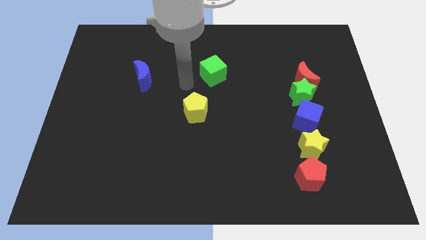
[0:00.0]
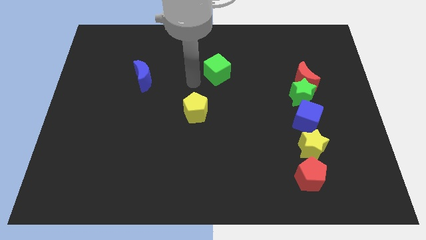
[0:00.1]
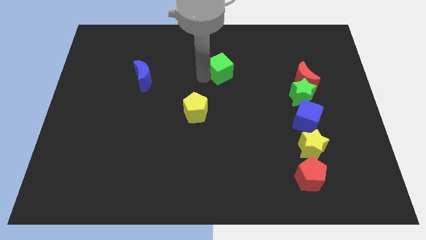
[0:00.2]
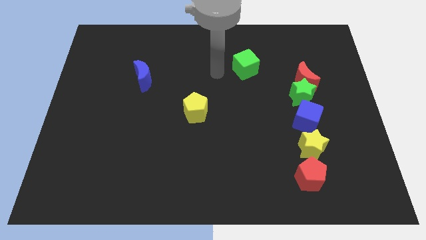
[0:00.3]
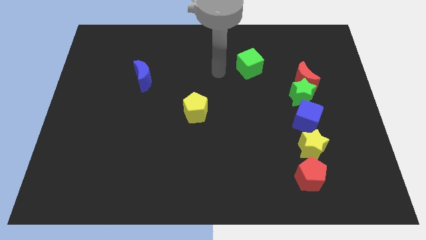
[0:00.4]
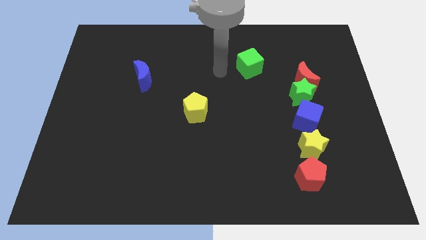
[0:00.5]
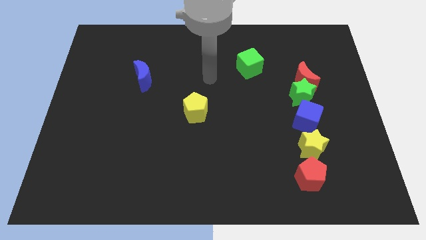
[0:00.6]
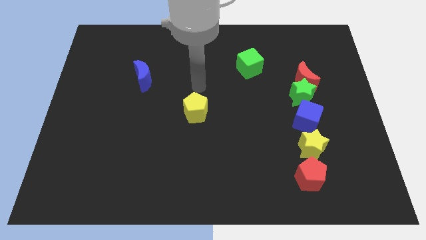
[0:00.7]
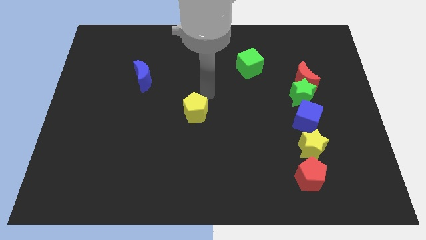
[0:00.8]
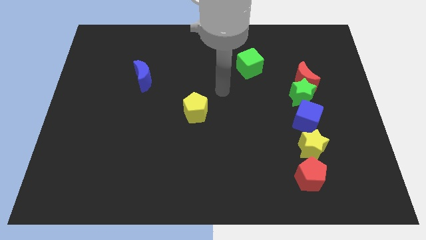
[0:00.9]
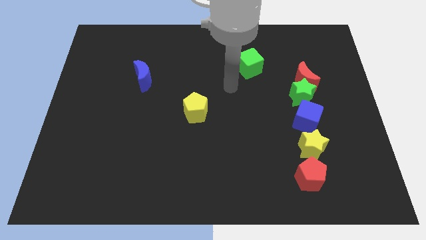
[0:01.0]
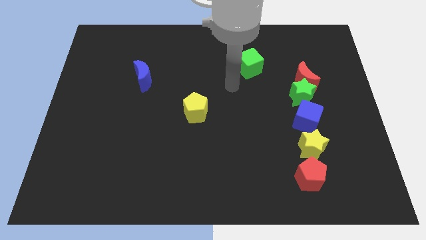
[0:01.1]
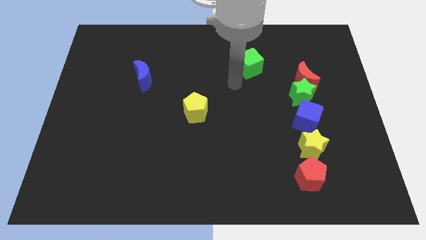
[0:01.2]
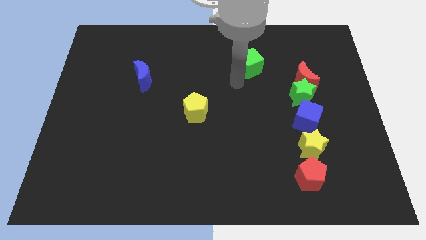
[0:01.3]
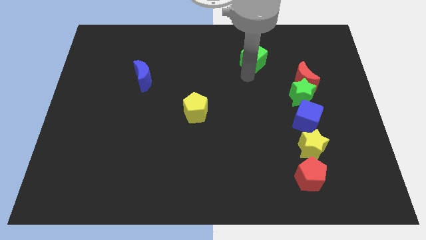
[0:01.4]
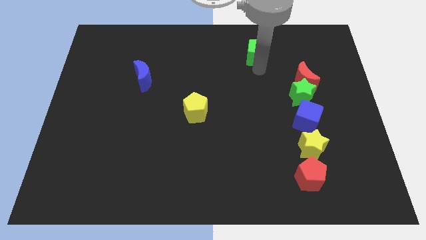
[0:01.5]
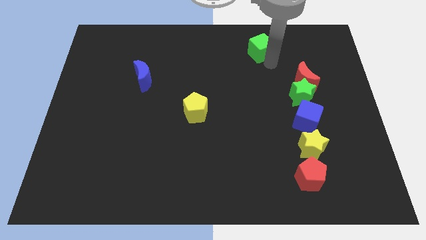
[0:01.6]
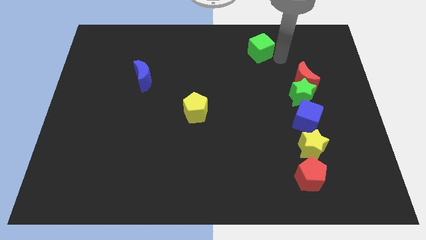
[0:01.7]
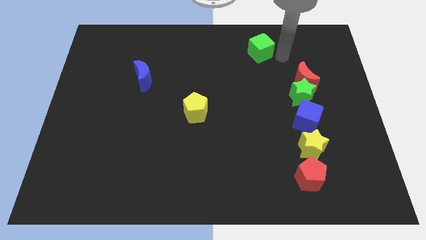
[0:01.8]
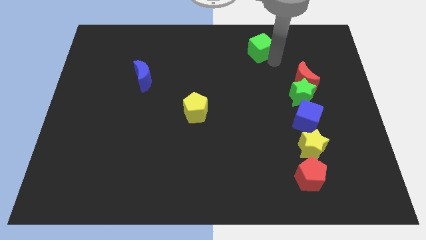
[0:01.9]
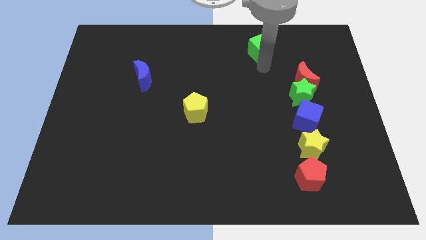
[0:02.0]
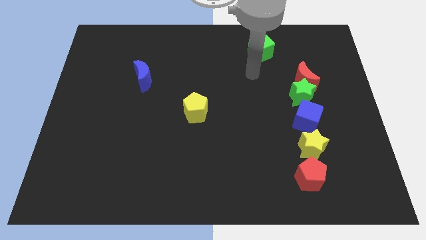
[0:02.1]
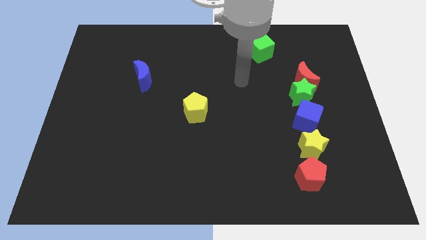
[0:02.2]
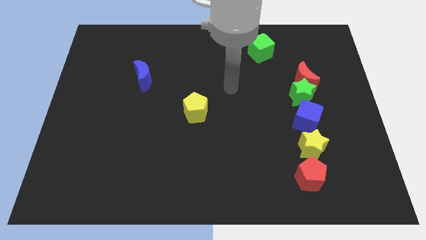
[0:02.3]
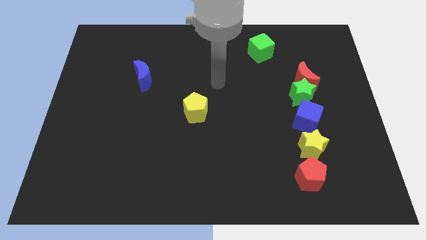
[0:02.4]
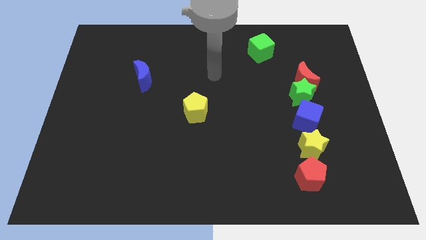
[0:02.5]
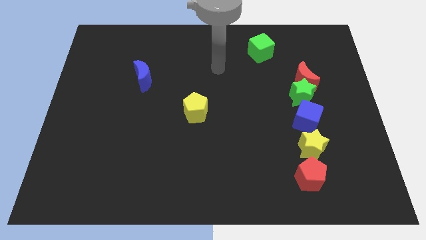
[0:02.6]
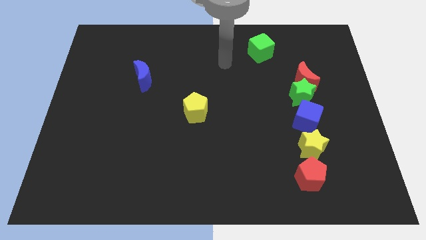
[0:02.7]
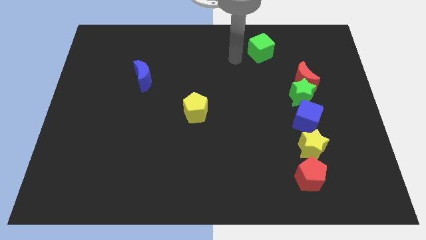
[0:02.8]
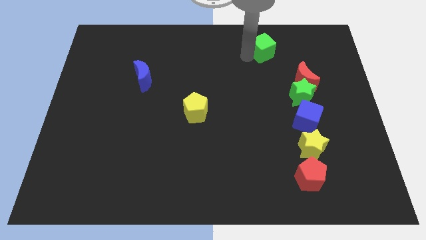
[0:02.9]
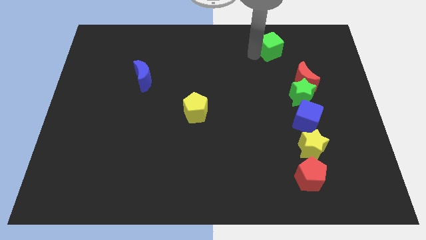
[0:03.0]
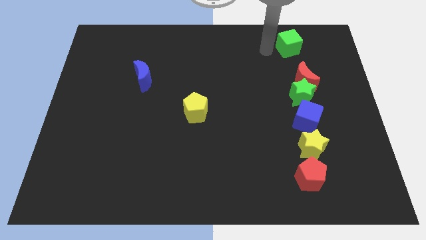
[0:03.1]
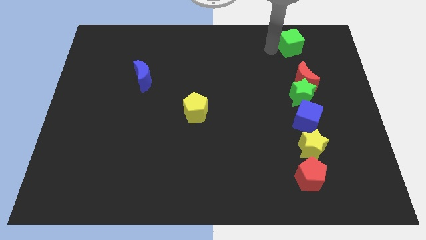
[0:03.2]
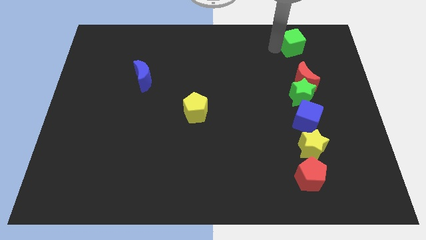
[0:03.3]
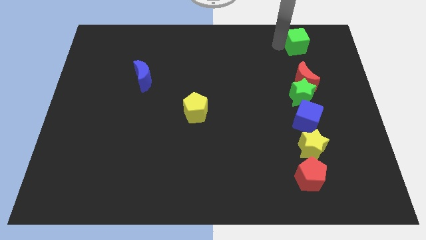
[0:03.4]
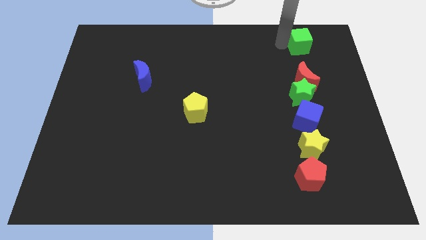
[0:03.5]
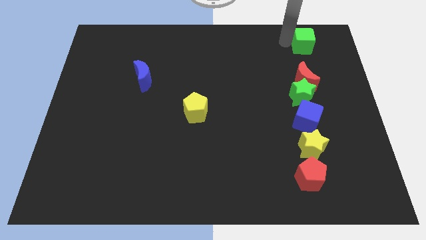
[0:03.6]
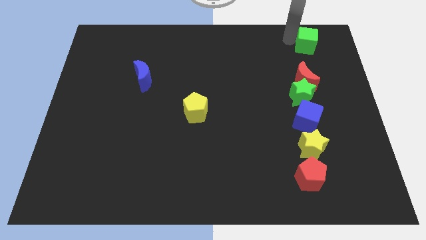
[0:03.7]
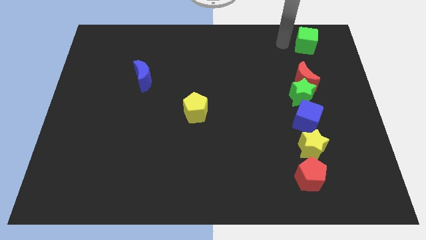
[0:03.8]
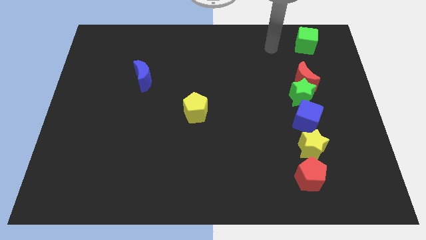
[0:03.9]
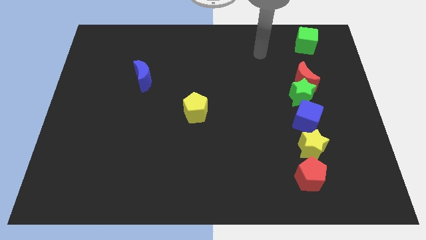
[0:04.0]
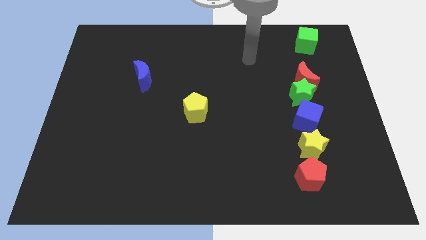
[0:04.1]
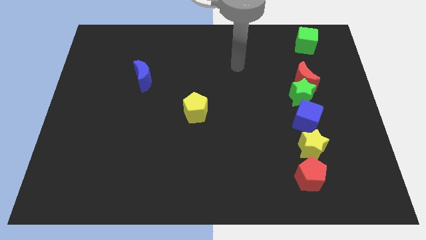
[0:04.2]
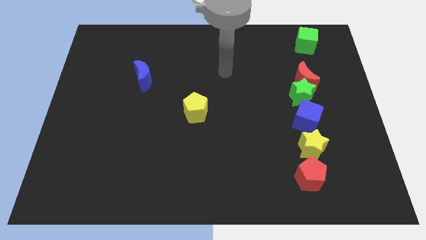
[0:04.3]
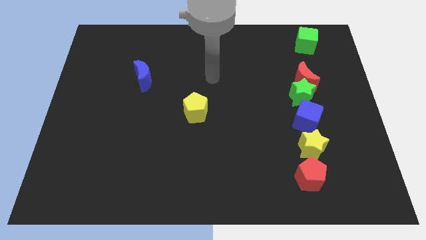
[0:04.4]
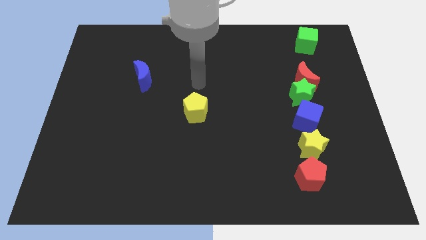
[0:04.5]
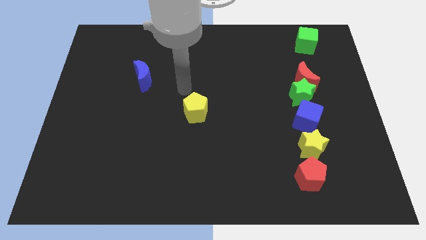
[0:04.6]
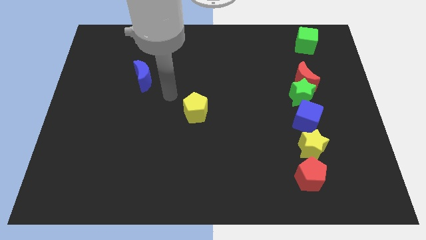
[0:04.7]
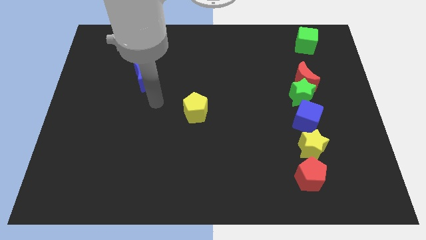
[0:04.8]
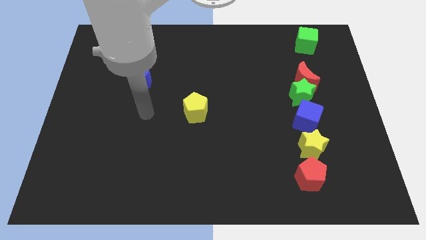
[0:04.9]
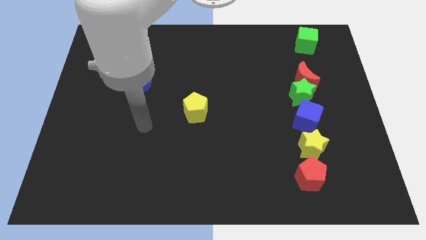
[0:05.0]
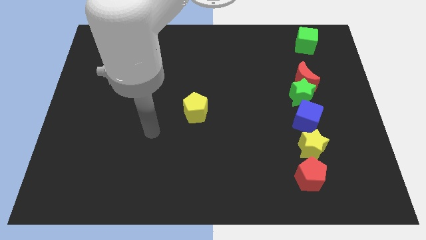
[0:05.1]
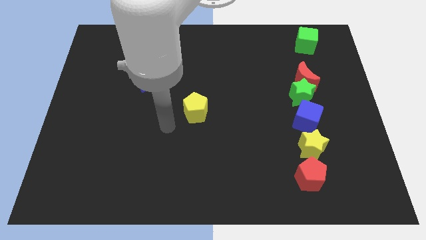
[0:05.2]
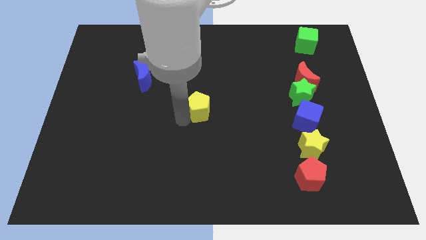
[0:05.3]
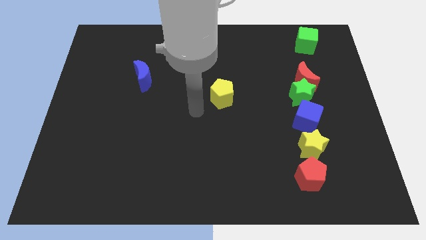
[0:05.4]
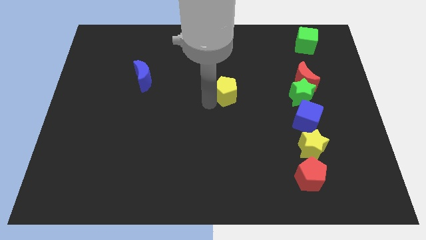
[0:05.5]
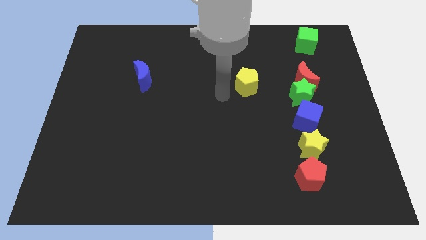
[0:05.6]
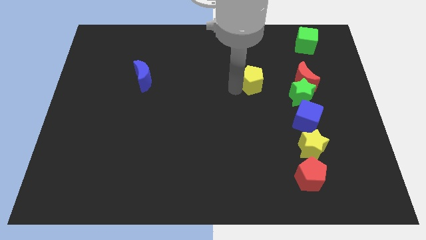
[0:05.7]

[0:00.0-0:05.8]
place the yellow pentagon to the left of the red moon

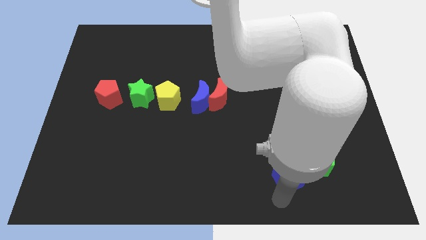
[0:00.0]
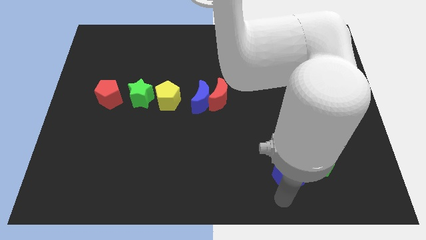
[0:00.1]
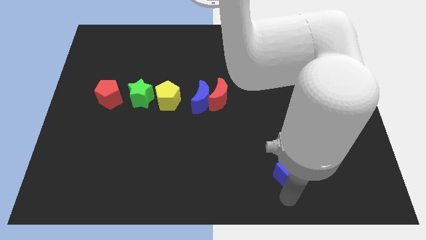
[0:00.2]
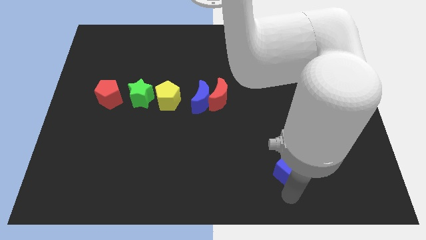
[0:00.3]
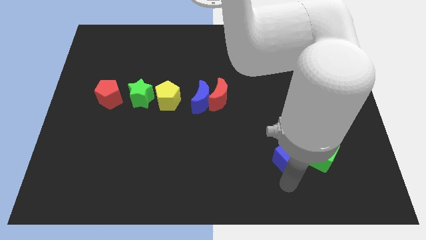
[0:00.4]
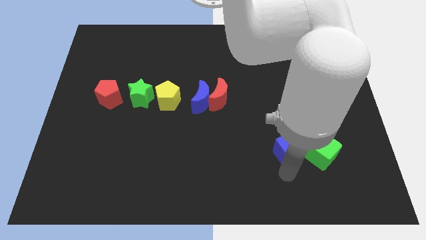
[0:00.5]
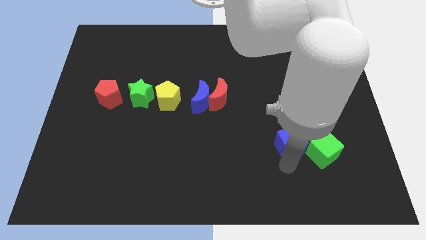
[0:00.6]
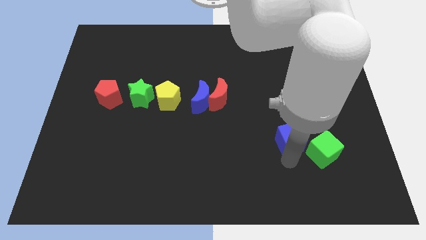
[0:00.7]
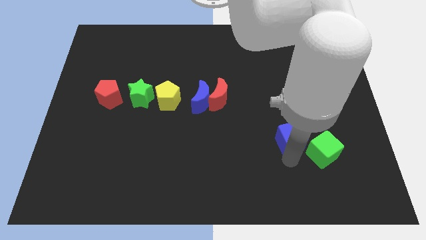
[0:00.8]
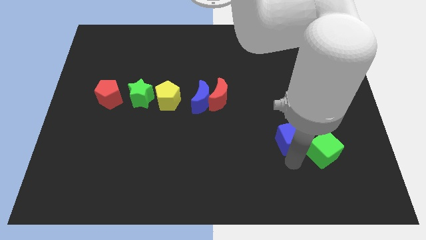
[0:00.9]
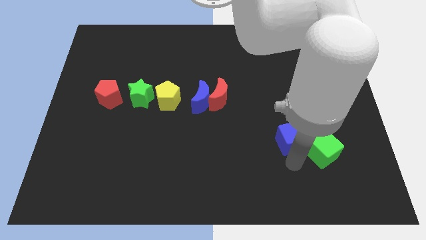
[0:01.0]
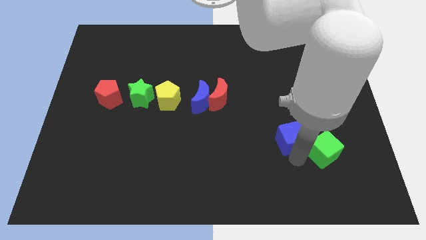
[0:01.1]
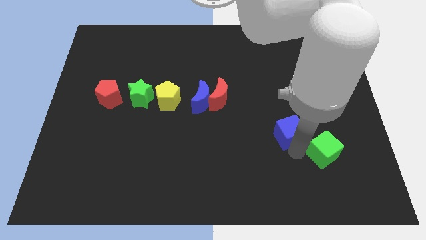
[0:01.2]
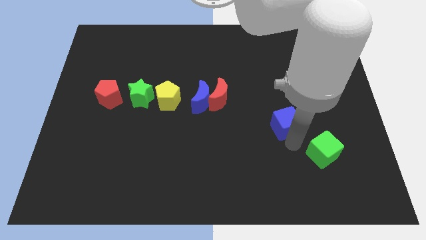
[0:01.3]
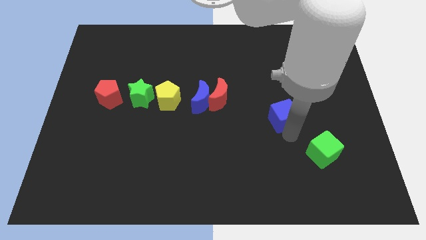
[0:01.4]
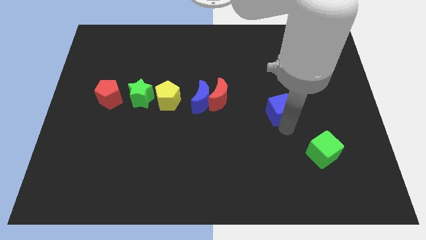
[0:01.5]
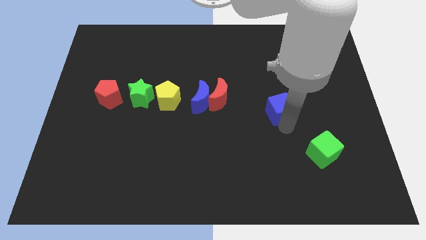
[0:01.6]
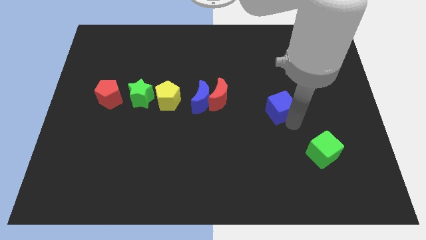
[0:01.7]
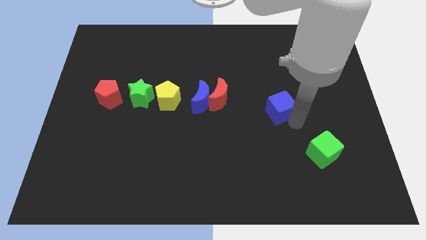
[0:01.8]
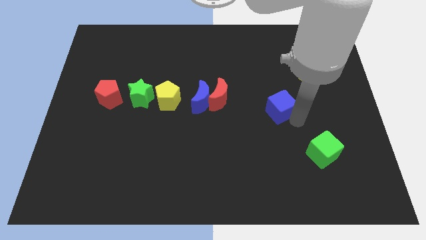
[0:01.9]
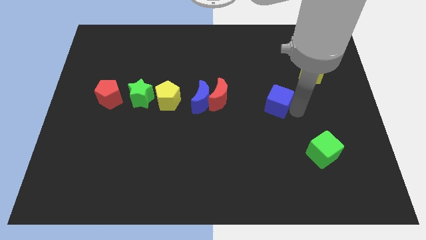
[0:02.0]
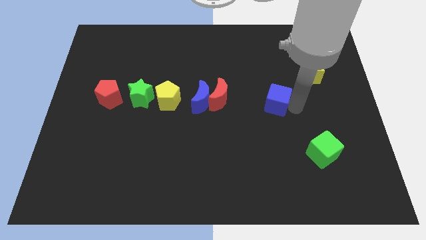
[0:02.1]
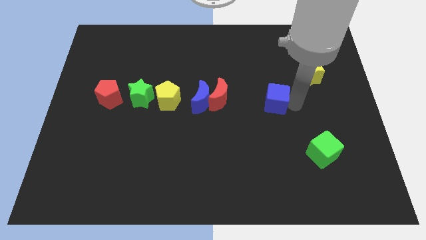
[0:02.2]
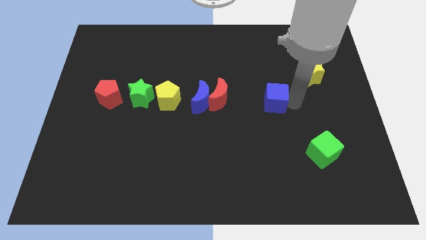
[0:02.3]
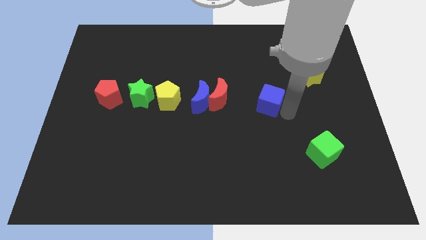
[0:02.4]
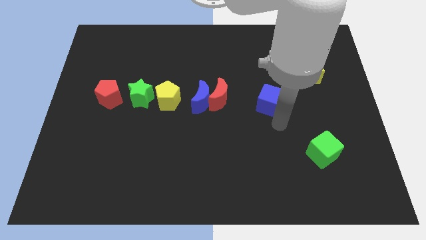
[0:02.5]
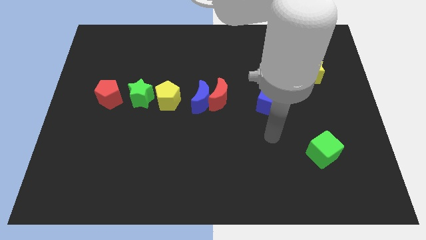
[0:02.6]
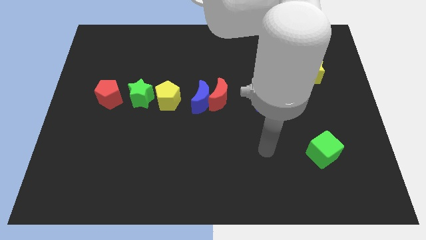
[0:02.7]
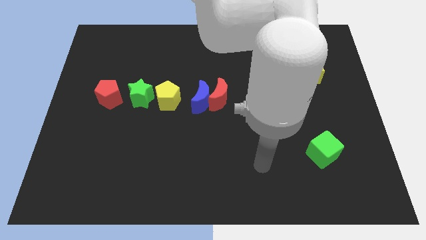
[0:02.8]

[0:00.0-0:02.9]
slide the blue cube upwards

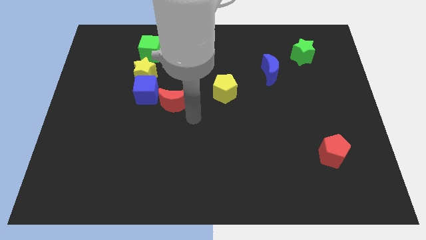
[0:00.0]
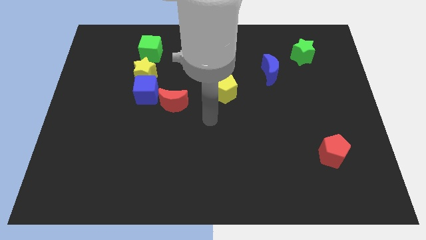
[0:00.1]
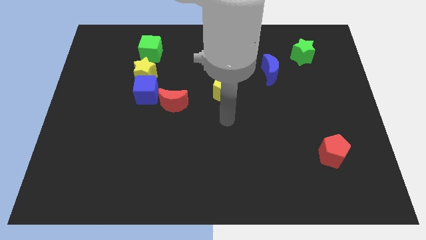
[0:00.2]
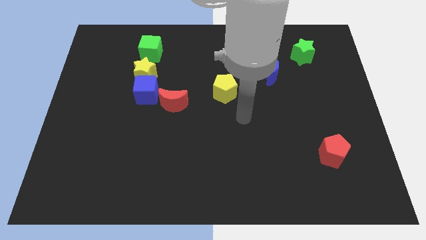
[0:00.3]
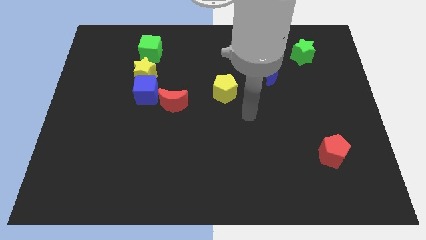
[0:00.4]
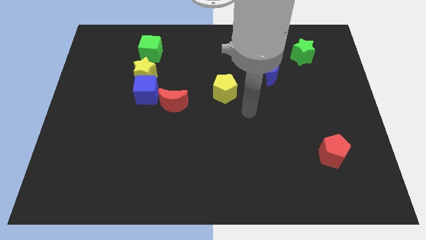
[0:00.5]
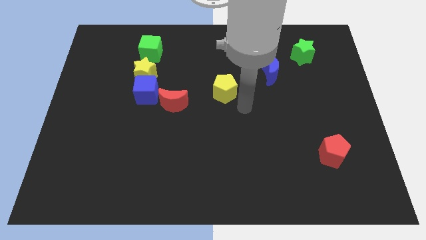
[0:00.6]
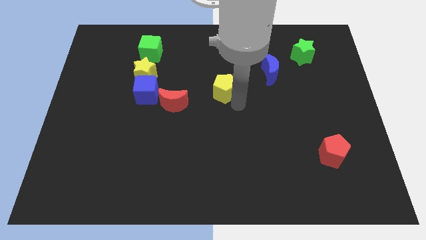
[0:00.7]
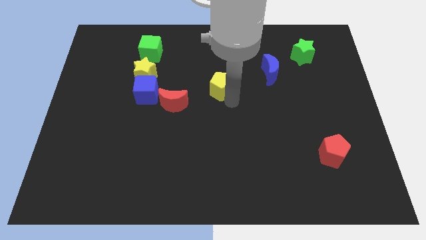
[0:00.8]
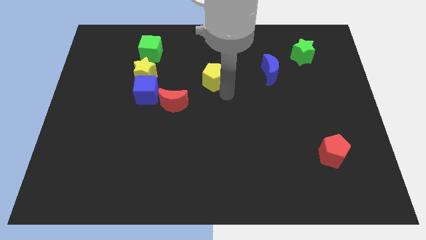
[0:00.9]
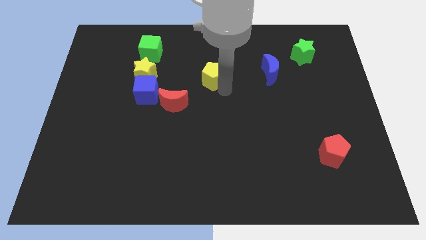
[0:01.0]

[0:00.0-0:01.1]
place the arm down to the yellow pentagon
